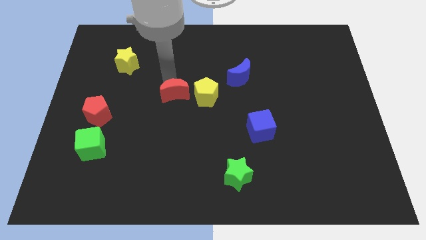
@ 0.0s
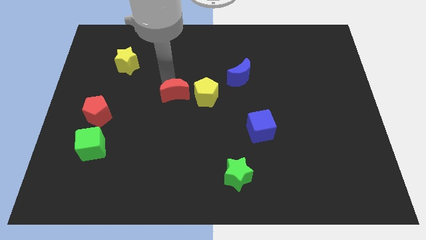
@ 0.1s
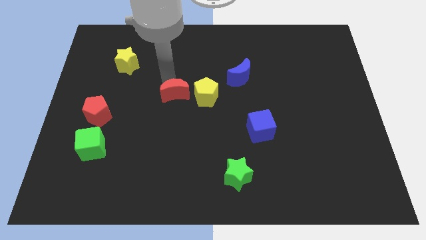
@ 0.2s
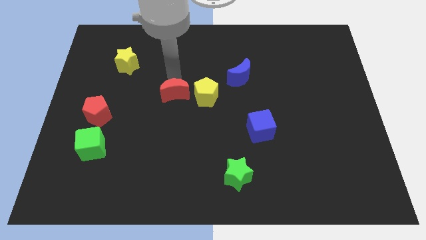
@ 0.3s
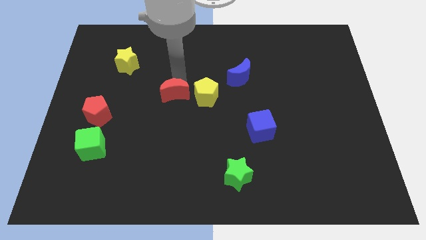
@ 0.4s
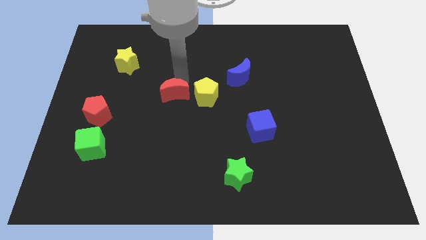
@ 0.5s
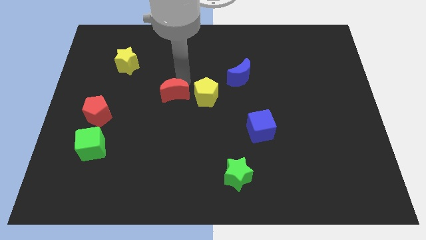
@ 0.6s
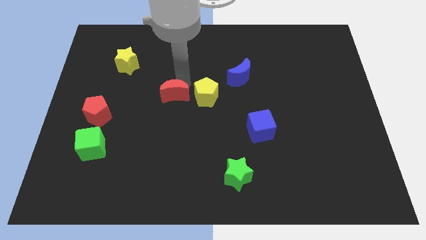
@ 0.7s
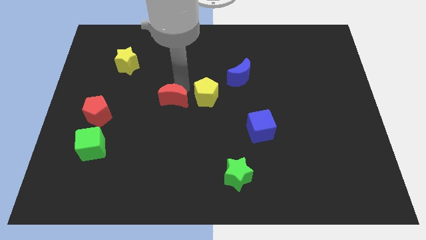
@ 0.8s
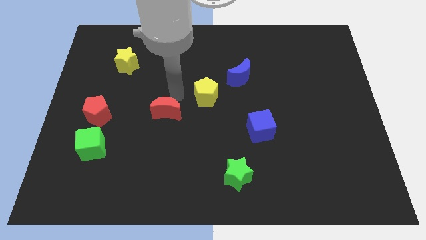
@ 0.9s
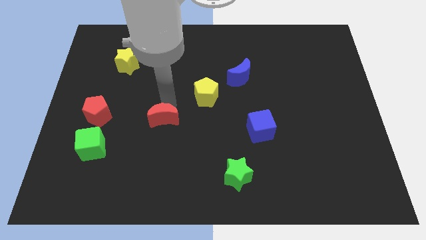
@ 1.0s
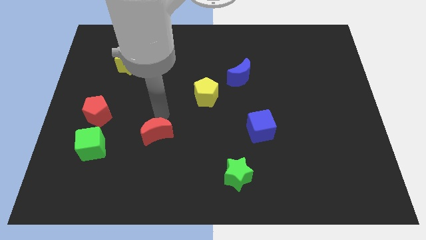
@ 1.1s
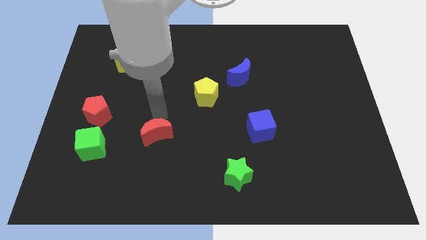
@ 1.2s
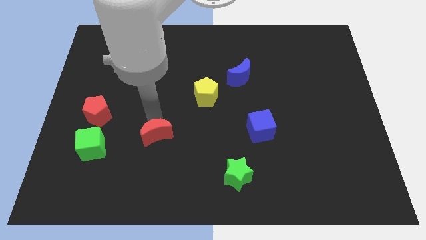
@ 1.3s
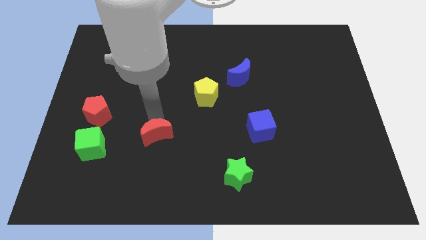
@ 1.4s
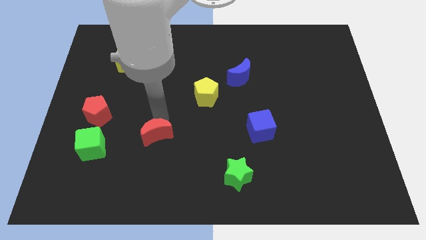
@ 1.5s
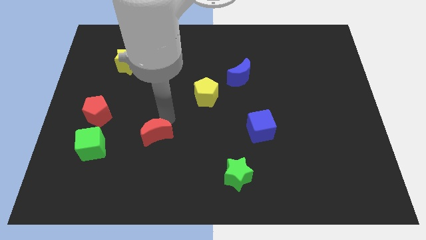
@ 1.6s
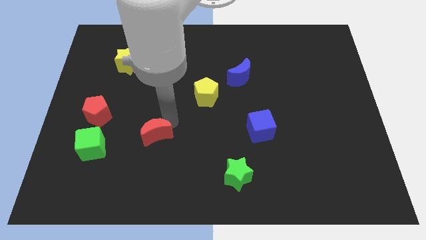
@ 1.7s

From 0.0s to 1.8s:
move red moon away from yellow pentagon

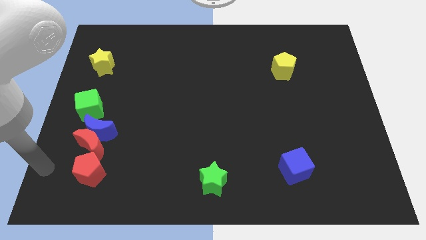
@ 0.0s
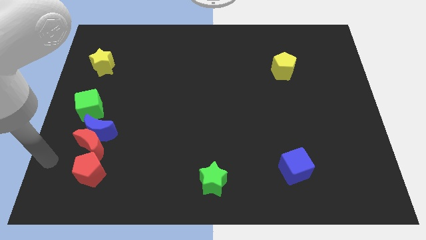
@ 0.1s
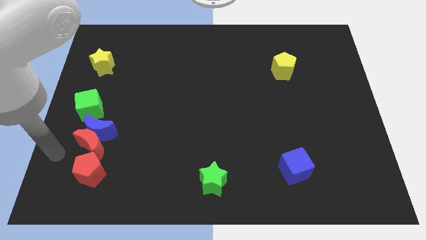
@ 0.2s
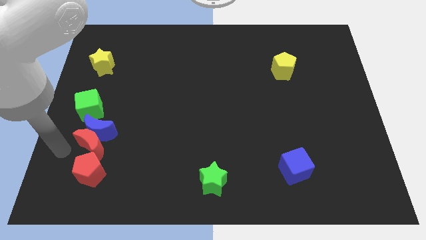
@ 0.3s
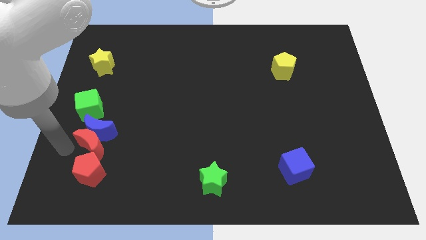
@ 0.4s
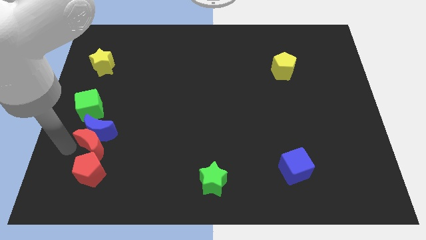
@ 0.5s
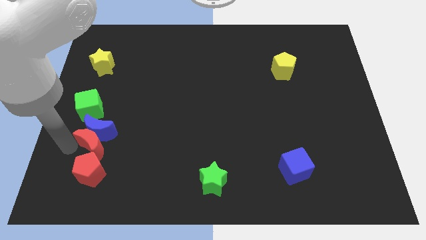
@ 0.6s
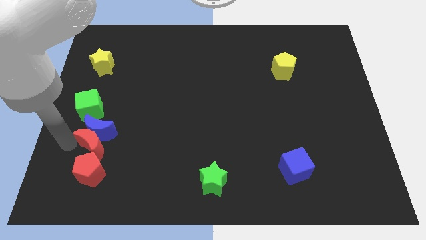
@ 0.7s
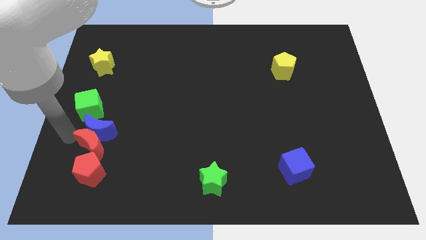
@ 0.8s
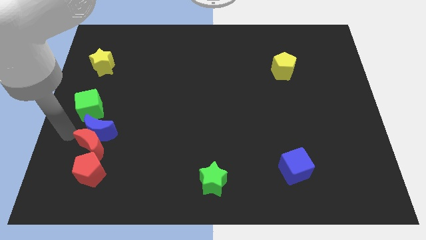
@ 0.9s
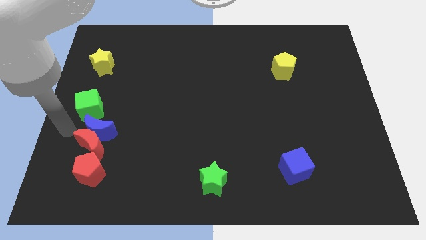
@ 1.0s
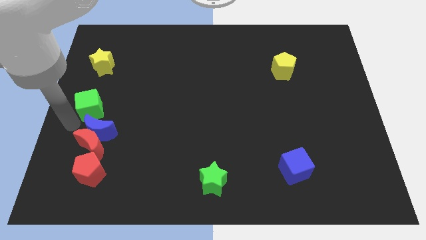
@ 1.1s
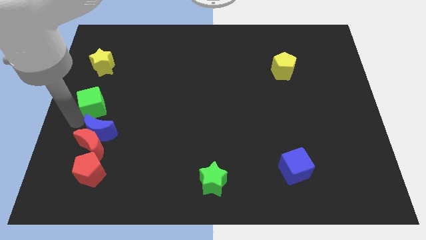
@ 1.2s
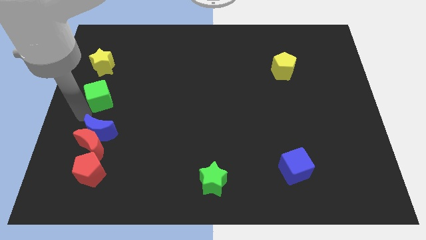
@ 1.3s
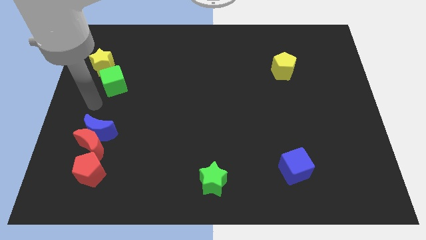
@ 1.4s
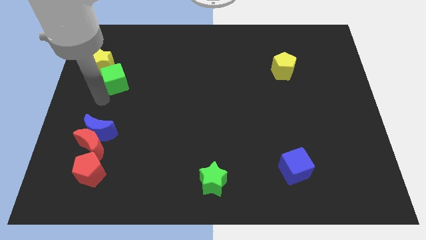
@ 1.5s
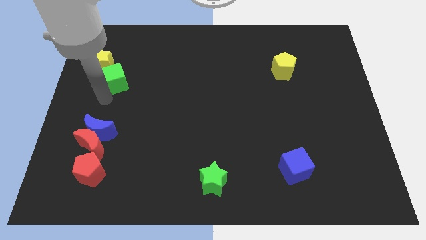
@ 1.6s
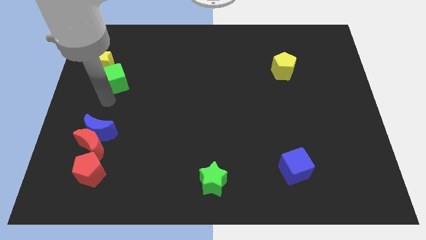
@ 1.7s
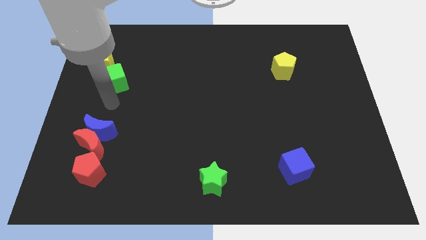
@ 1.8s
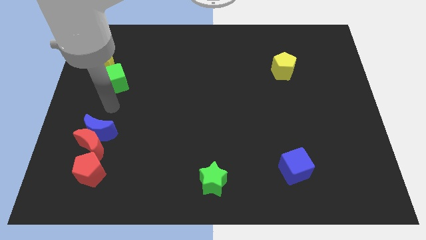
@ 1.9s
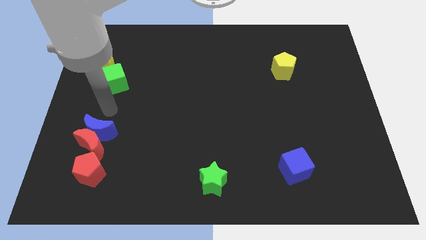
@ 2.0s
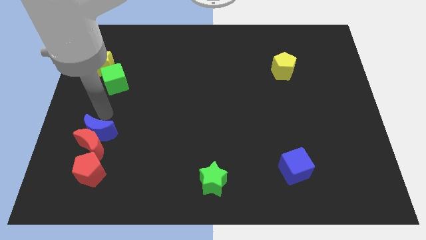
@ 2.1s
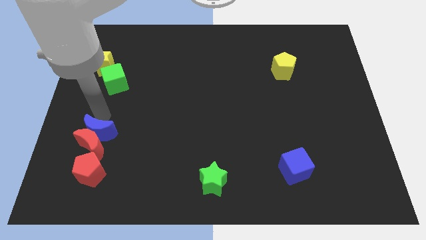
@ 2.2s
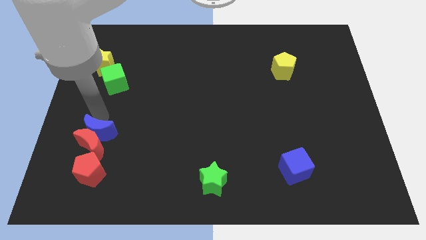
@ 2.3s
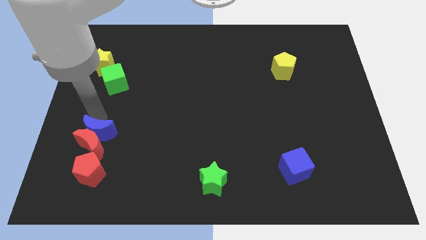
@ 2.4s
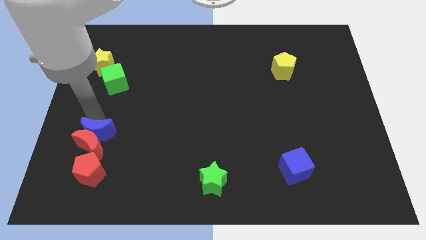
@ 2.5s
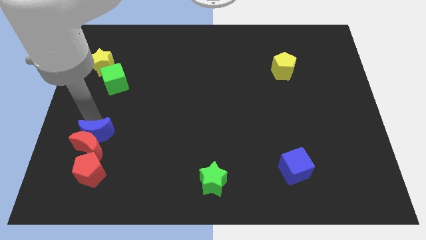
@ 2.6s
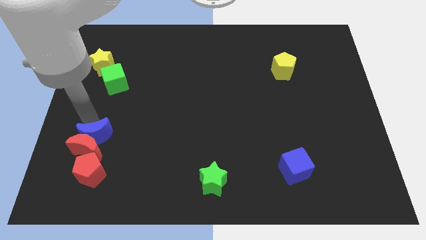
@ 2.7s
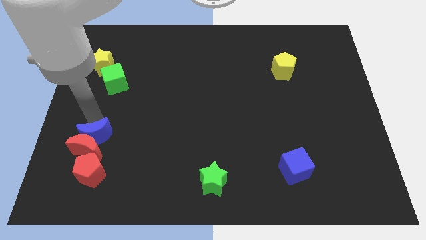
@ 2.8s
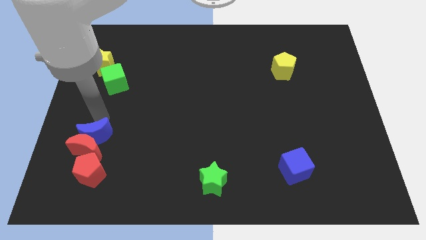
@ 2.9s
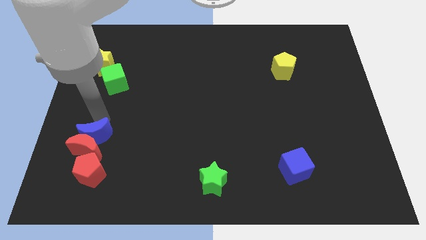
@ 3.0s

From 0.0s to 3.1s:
move the green cube to the bottom right of the yellow star

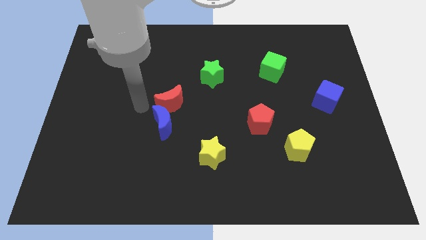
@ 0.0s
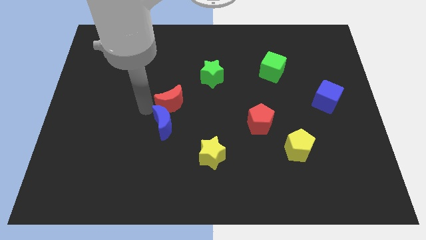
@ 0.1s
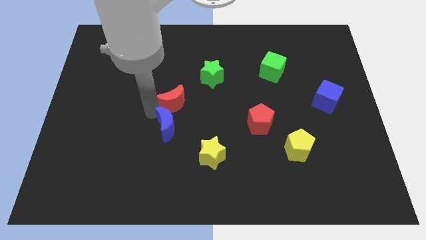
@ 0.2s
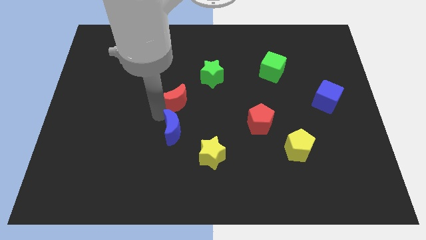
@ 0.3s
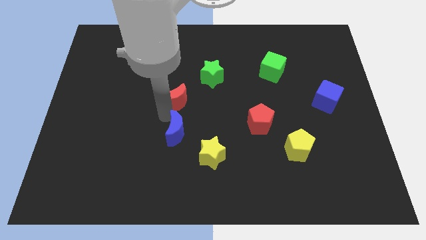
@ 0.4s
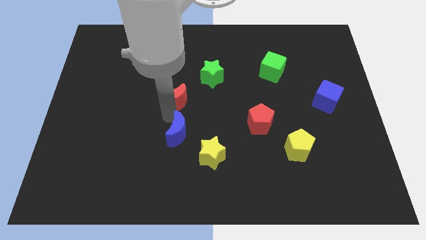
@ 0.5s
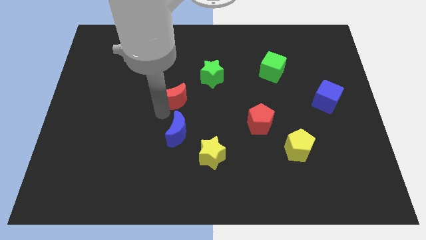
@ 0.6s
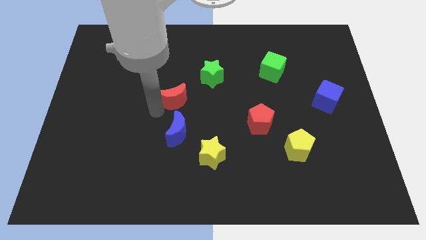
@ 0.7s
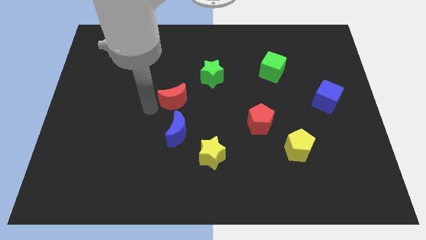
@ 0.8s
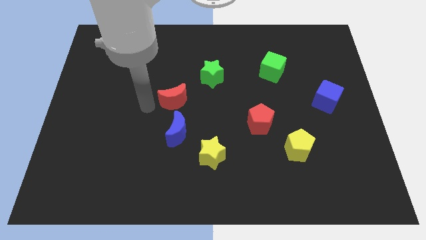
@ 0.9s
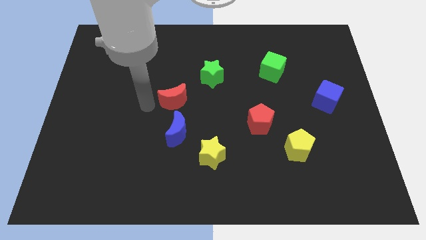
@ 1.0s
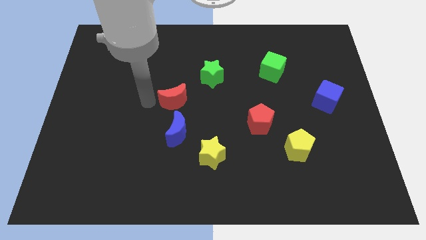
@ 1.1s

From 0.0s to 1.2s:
separate the blue moon and the red moon

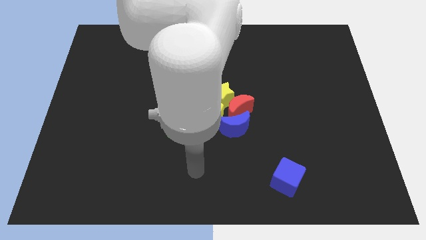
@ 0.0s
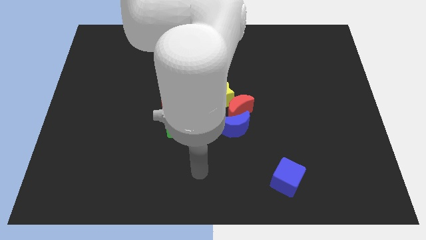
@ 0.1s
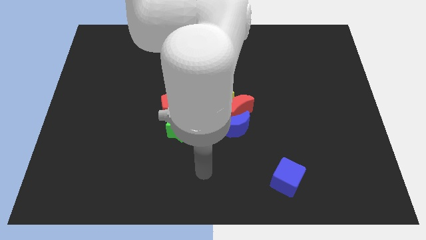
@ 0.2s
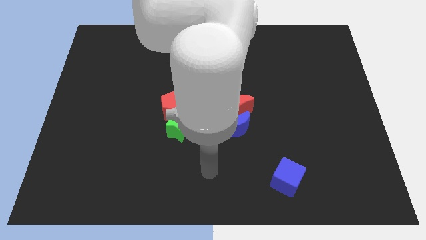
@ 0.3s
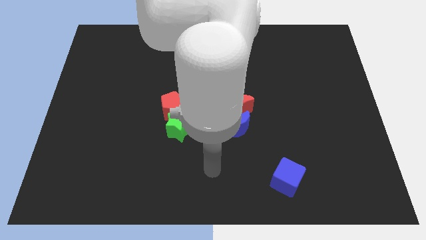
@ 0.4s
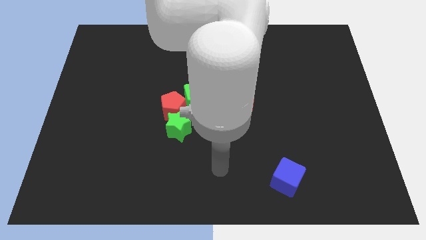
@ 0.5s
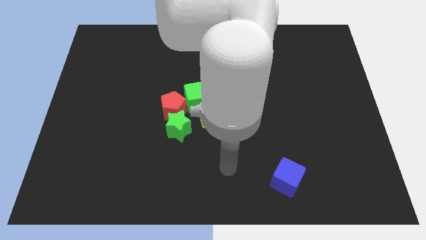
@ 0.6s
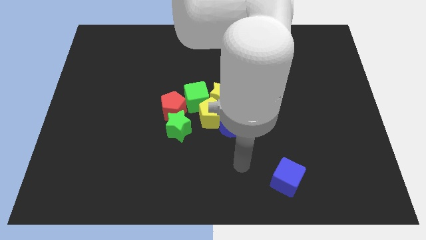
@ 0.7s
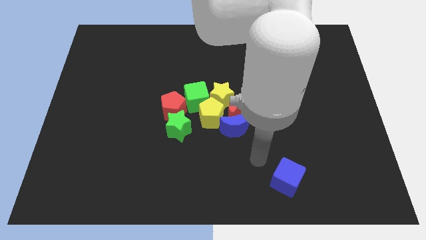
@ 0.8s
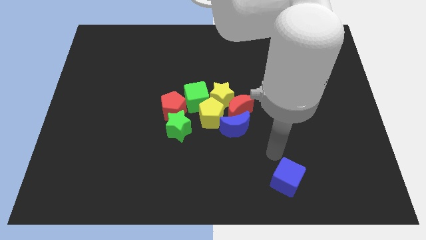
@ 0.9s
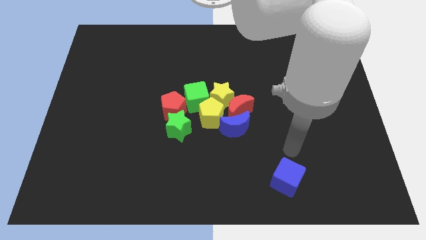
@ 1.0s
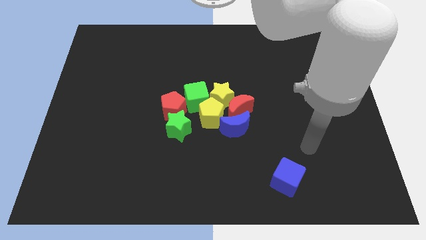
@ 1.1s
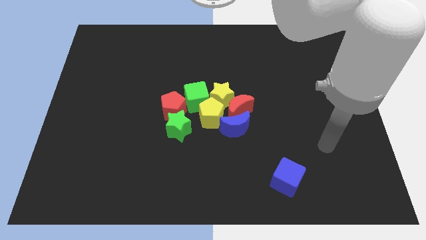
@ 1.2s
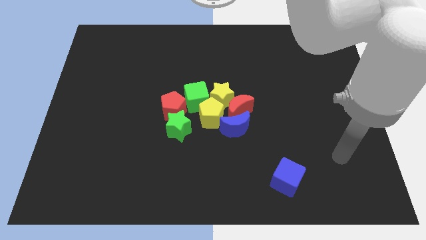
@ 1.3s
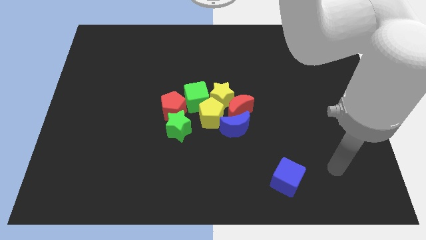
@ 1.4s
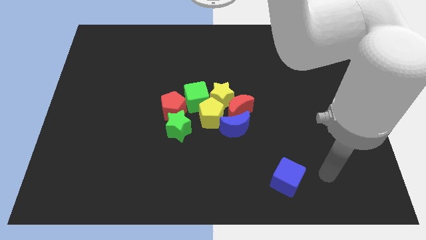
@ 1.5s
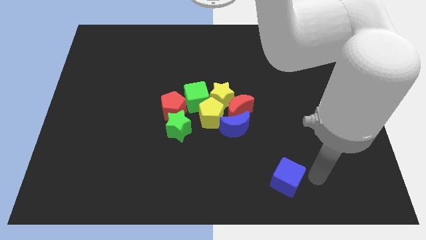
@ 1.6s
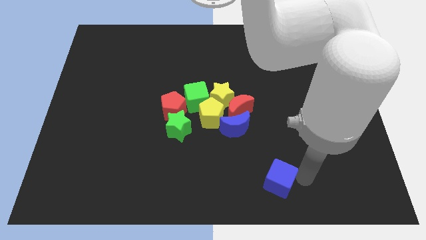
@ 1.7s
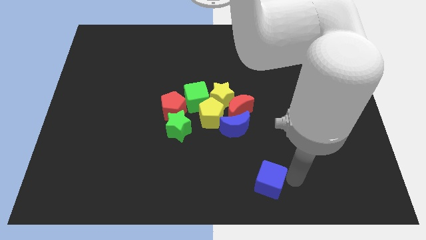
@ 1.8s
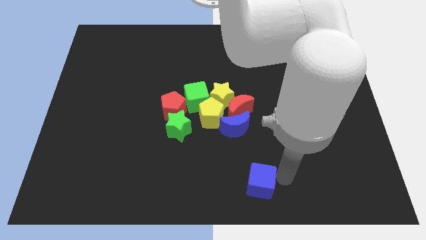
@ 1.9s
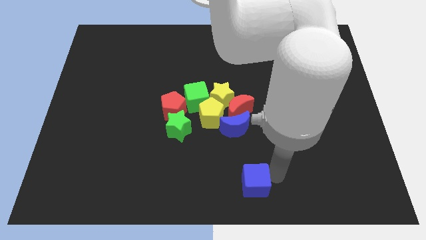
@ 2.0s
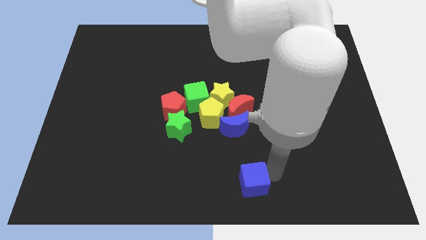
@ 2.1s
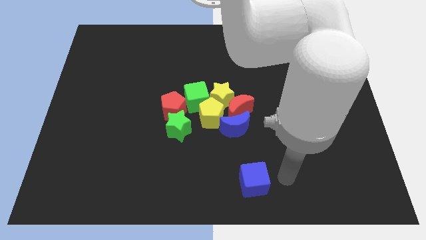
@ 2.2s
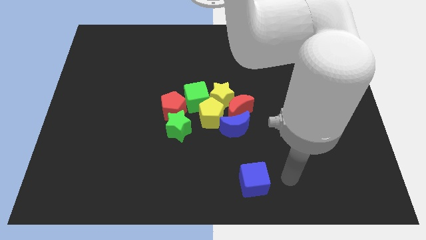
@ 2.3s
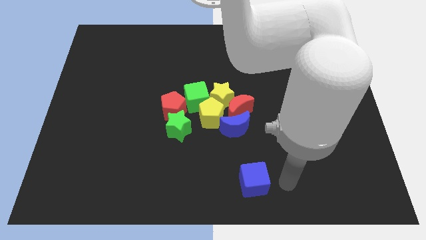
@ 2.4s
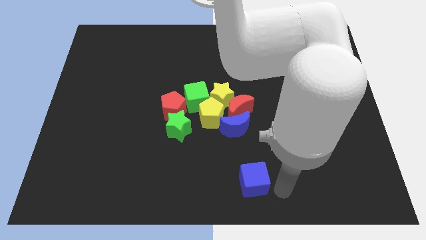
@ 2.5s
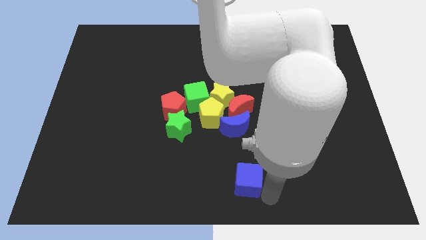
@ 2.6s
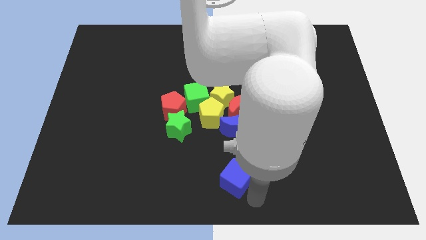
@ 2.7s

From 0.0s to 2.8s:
move the blue cube to the bottom side of the blue moon

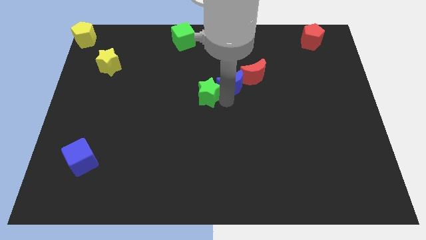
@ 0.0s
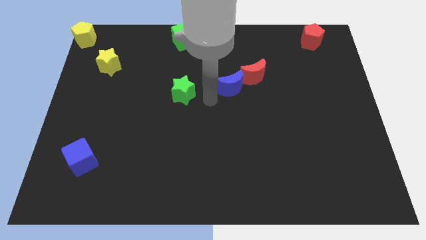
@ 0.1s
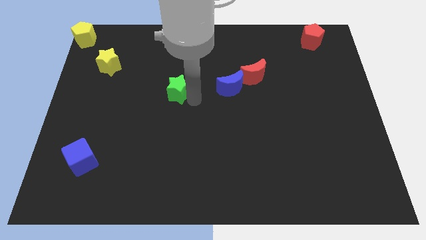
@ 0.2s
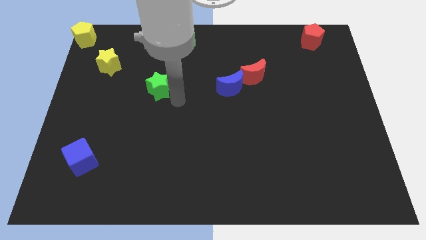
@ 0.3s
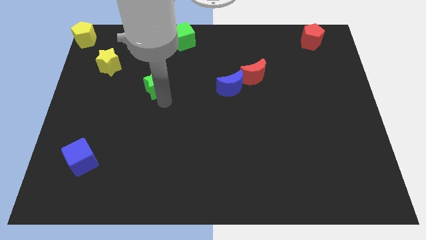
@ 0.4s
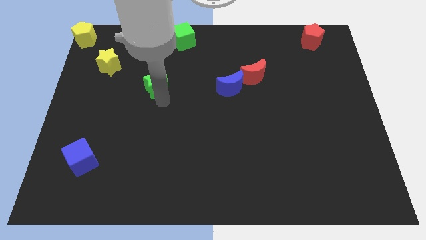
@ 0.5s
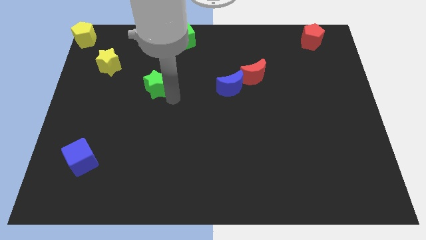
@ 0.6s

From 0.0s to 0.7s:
move green star slightly left
